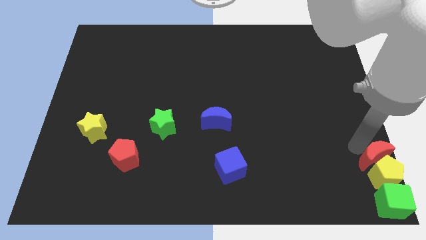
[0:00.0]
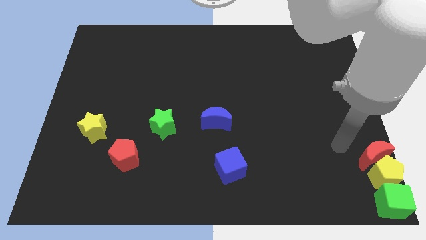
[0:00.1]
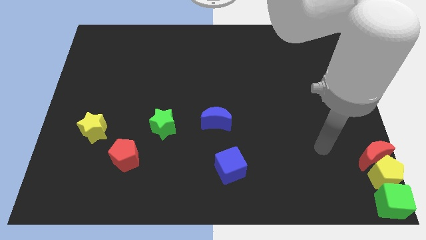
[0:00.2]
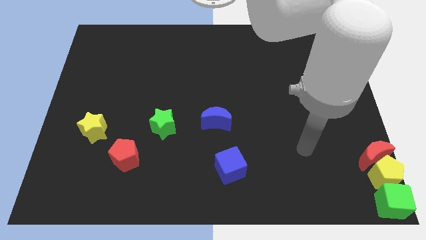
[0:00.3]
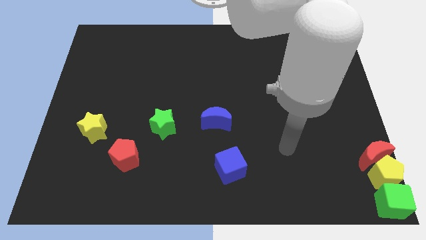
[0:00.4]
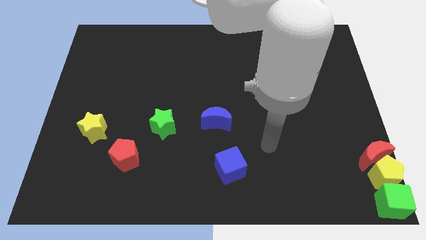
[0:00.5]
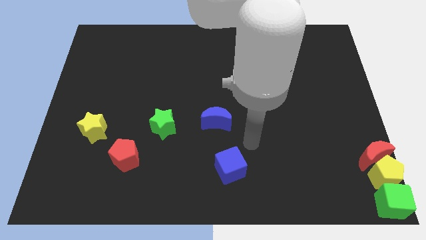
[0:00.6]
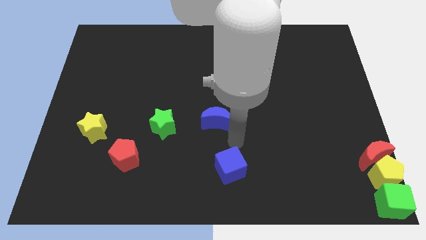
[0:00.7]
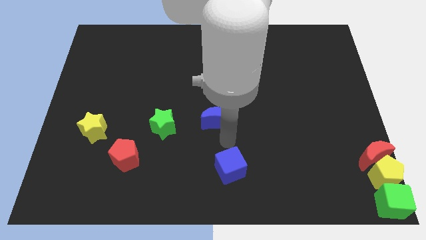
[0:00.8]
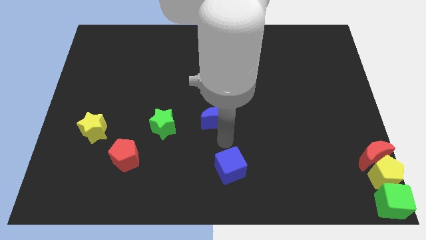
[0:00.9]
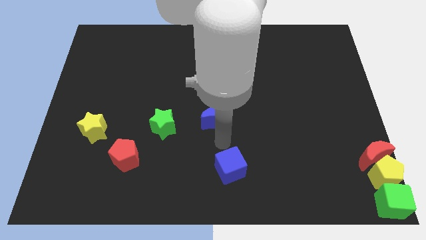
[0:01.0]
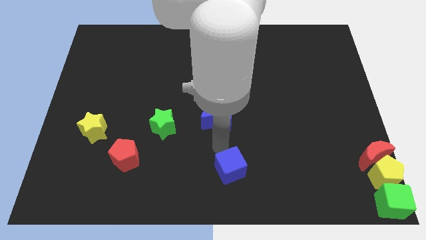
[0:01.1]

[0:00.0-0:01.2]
go and push your hand in between the two blue blocks

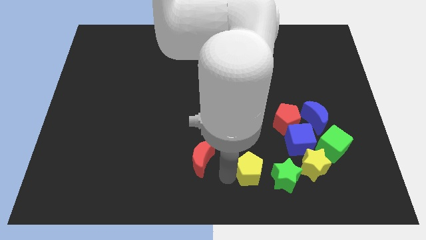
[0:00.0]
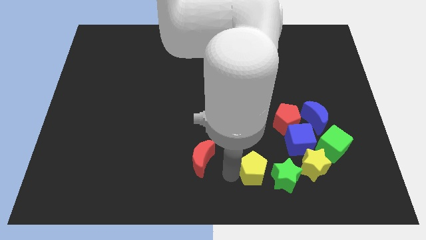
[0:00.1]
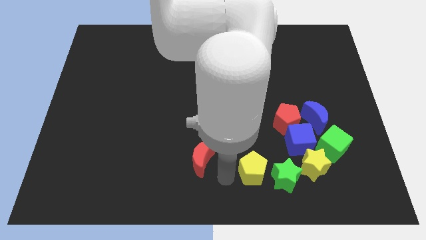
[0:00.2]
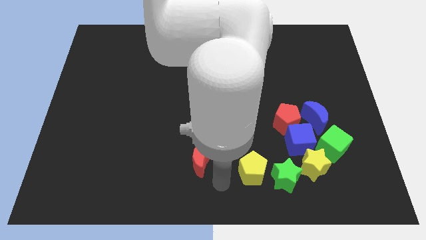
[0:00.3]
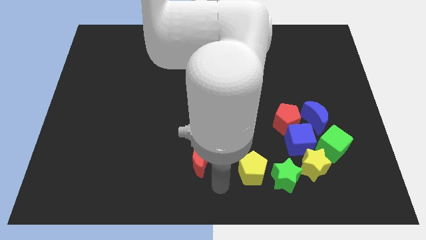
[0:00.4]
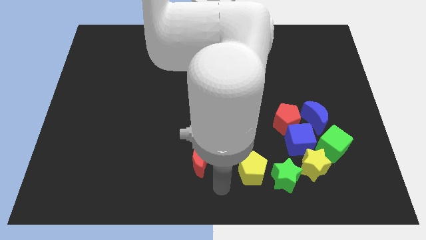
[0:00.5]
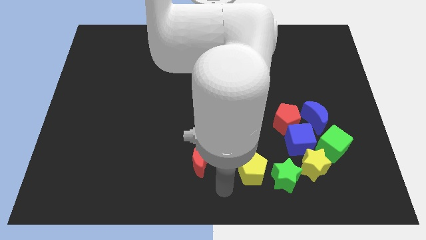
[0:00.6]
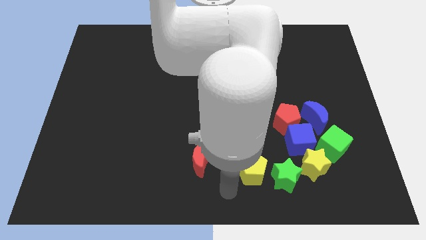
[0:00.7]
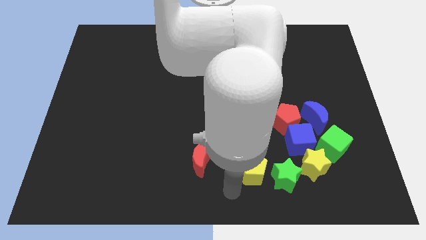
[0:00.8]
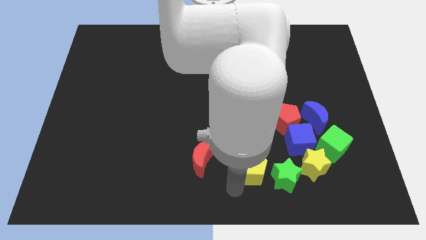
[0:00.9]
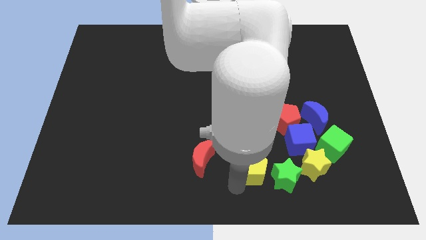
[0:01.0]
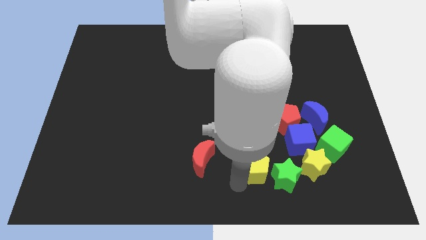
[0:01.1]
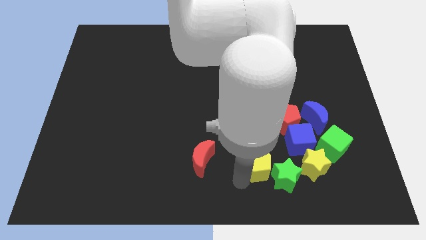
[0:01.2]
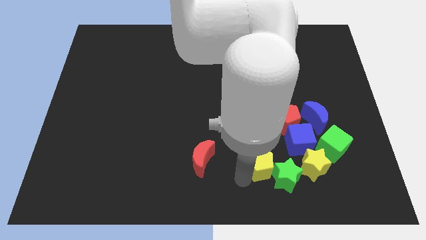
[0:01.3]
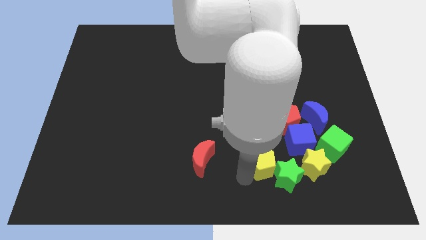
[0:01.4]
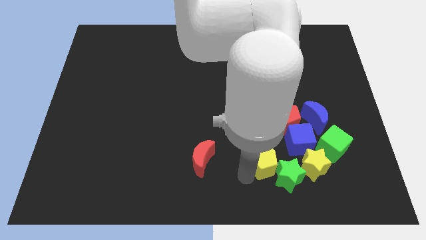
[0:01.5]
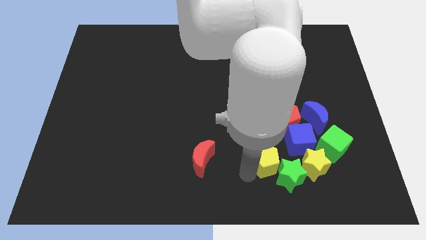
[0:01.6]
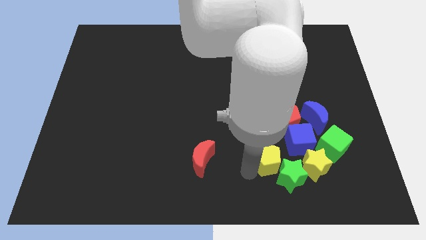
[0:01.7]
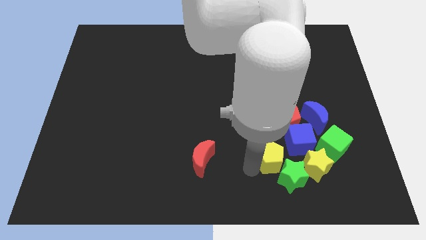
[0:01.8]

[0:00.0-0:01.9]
move the yellow pentagon into the green star

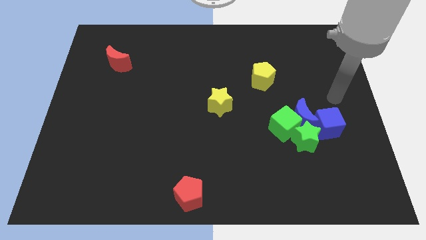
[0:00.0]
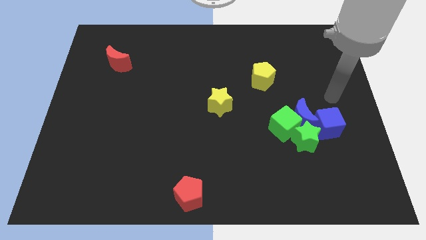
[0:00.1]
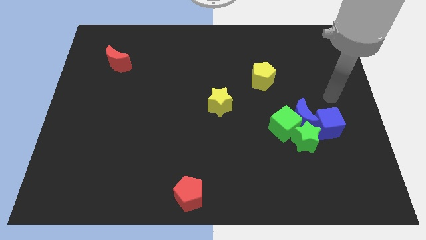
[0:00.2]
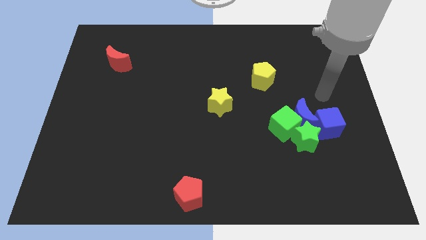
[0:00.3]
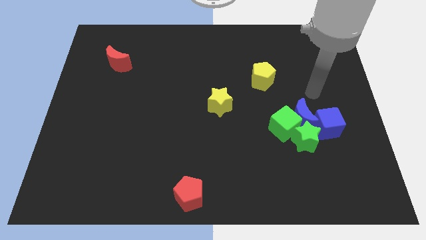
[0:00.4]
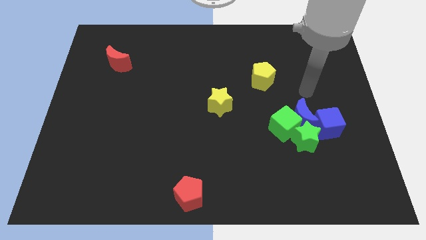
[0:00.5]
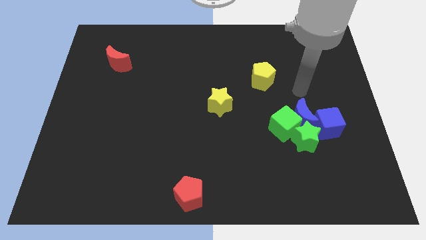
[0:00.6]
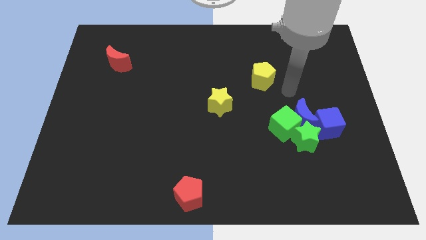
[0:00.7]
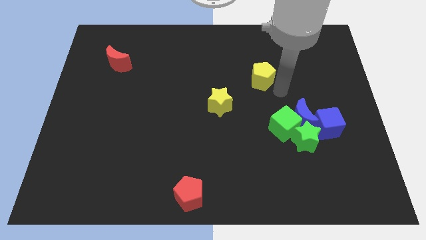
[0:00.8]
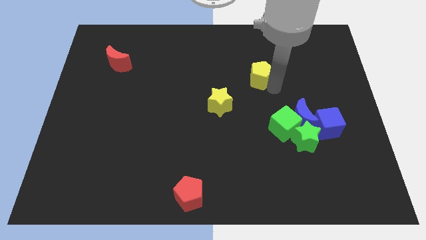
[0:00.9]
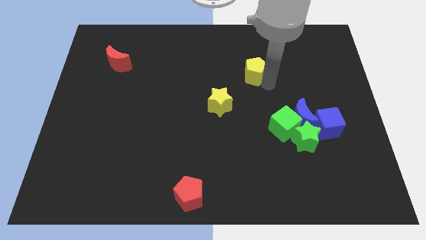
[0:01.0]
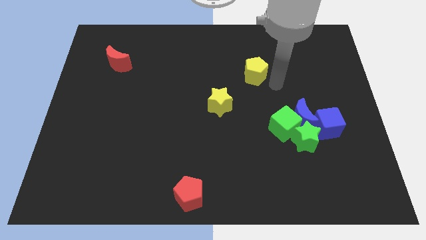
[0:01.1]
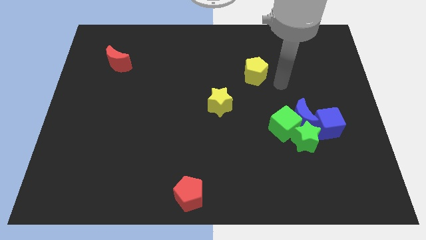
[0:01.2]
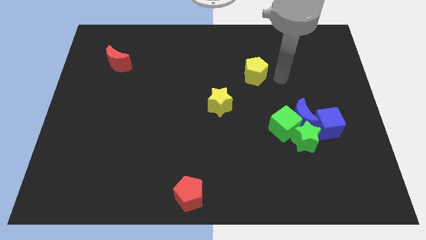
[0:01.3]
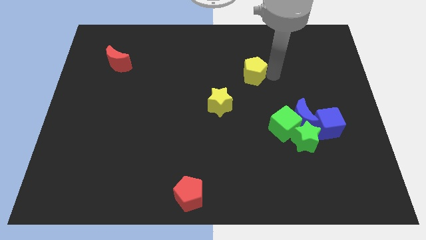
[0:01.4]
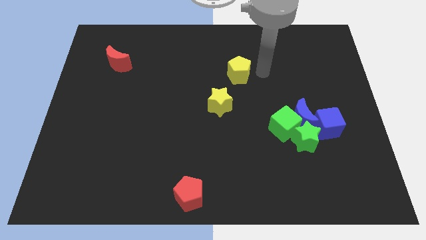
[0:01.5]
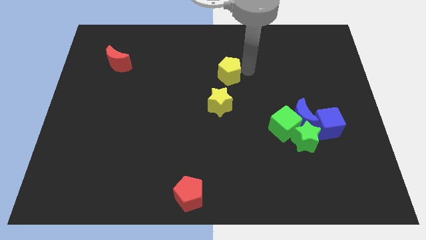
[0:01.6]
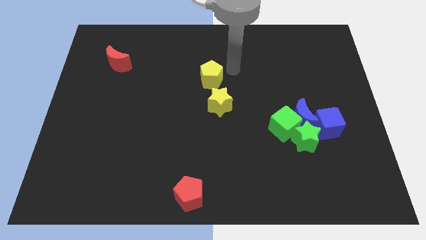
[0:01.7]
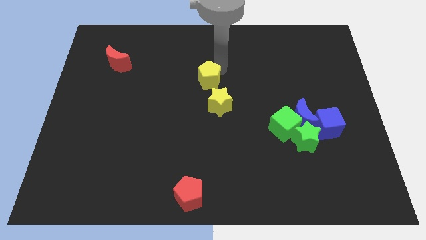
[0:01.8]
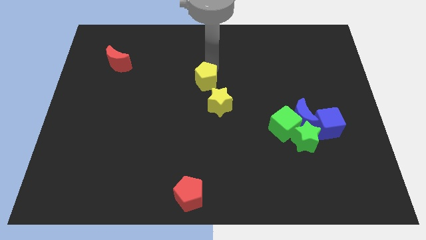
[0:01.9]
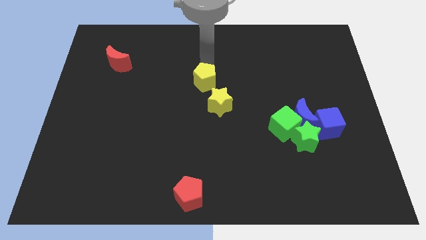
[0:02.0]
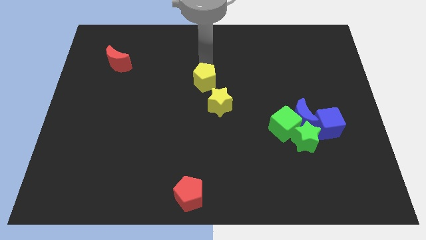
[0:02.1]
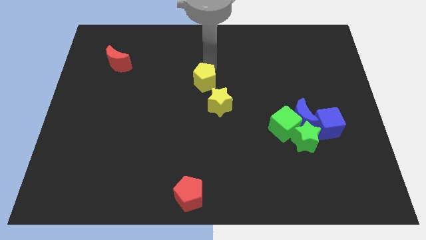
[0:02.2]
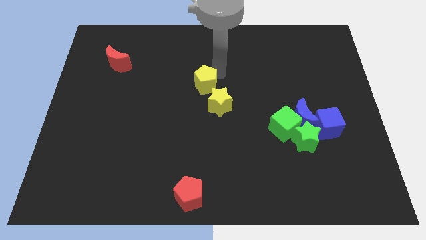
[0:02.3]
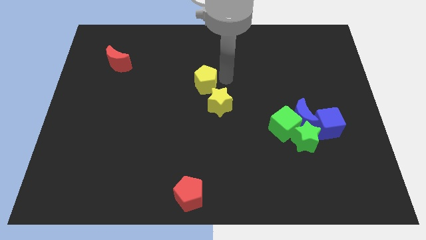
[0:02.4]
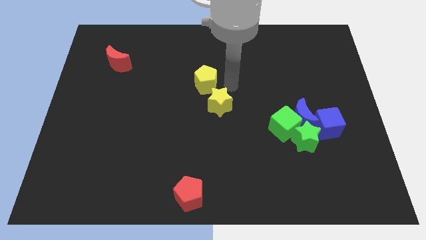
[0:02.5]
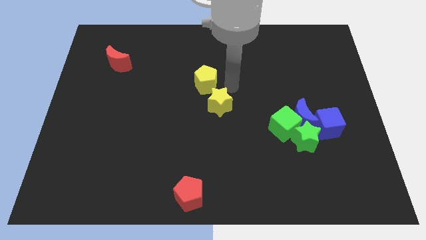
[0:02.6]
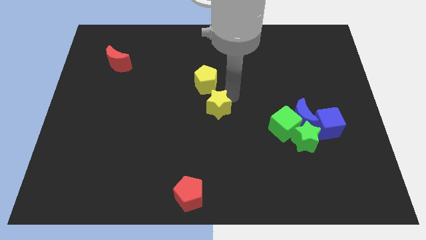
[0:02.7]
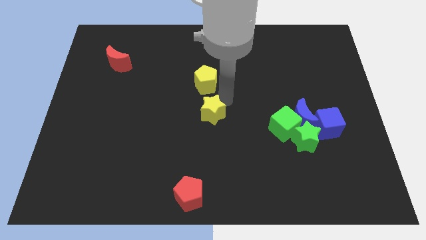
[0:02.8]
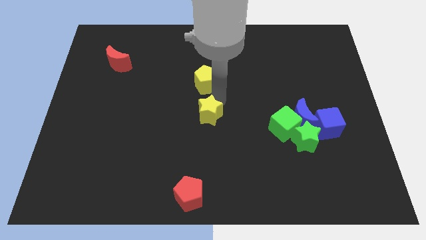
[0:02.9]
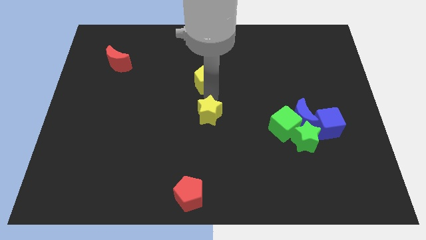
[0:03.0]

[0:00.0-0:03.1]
place the yellow blocks at the center of the table

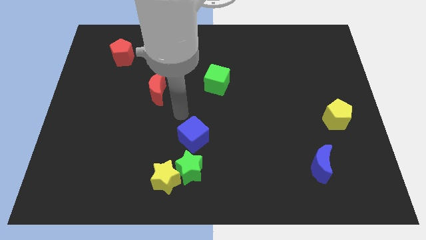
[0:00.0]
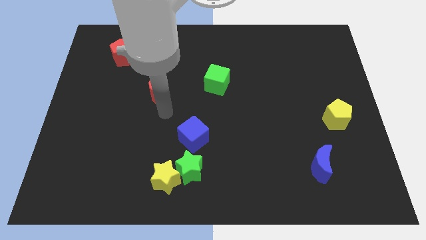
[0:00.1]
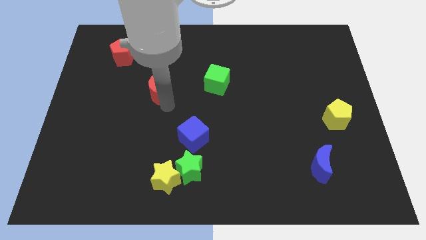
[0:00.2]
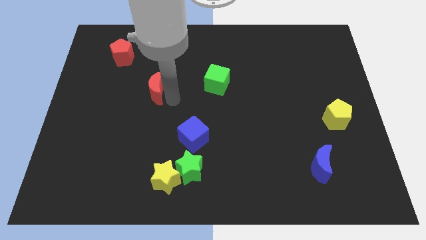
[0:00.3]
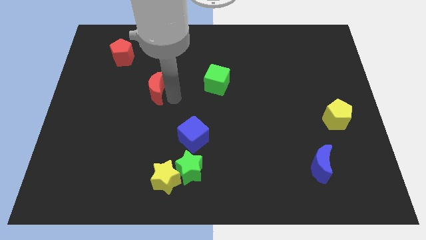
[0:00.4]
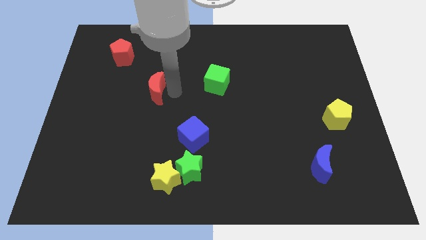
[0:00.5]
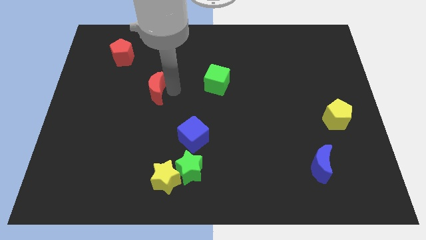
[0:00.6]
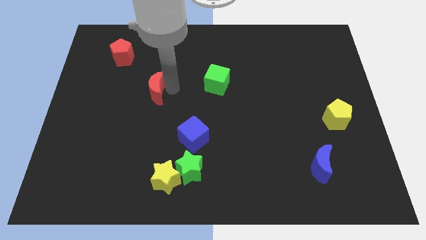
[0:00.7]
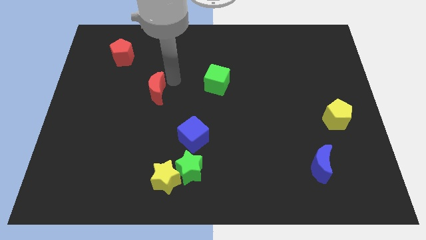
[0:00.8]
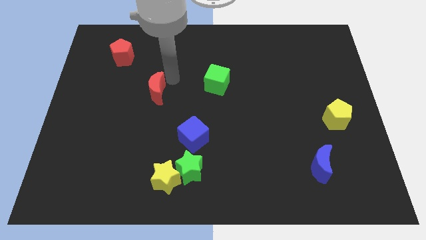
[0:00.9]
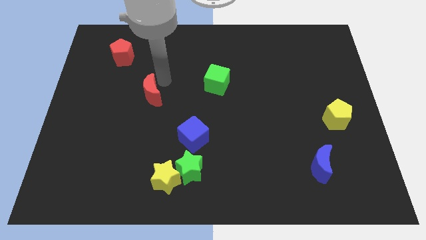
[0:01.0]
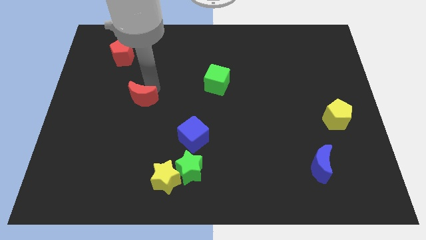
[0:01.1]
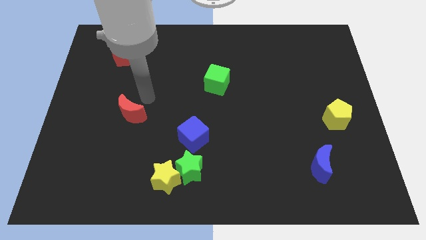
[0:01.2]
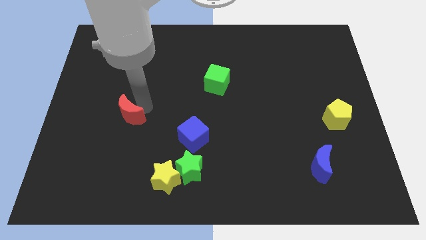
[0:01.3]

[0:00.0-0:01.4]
place the red moon diagonally to green star

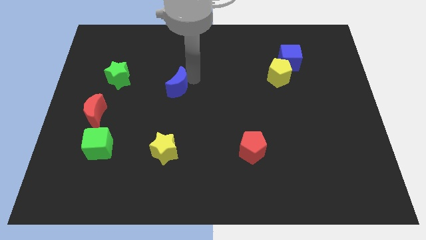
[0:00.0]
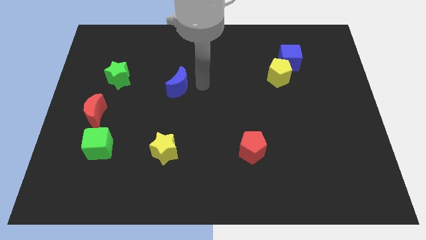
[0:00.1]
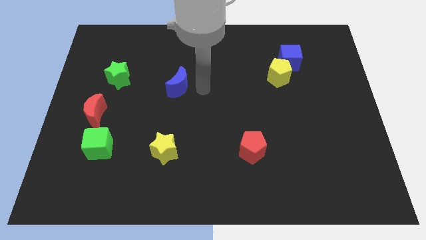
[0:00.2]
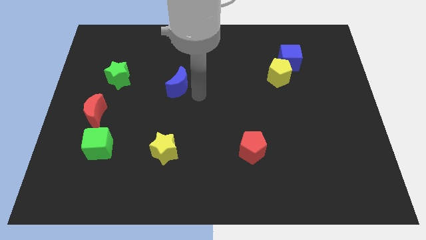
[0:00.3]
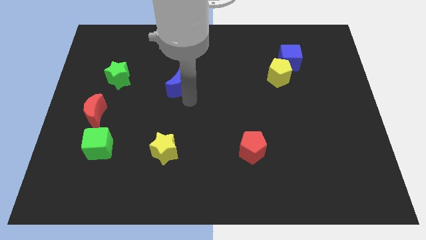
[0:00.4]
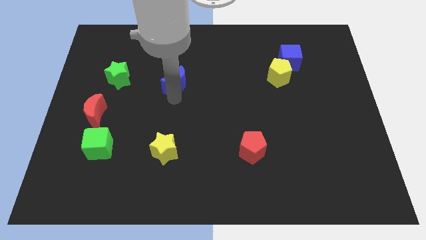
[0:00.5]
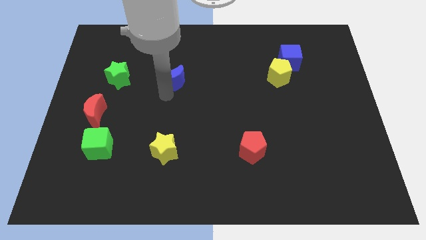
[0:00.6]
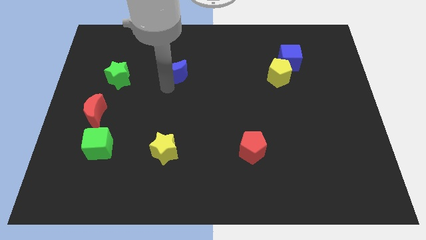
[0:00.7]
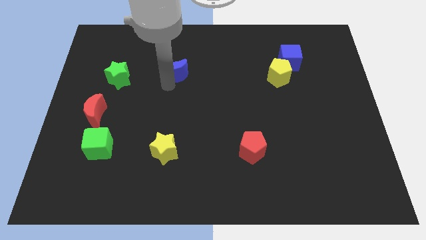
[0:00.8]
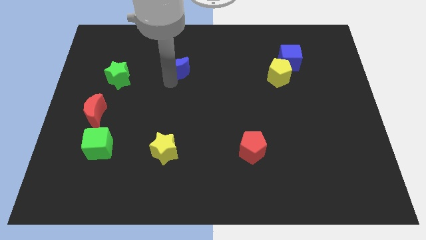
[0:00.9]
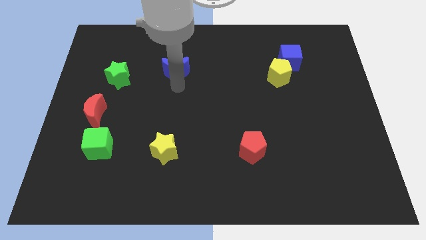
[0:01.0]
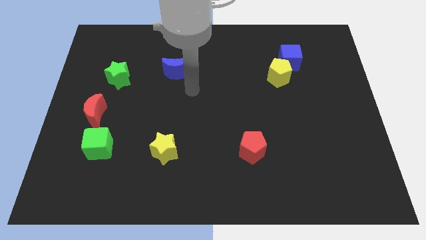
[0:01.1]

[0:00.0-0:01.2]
push the blue moon slightly to the top of the board
